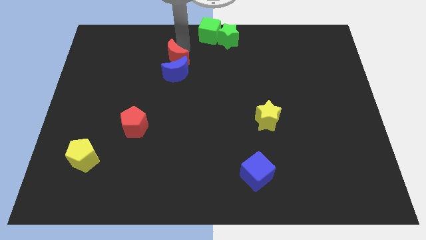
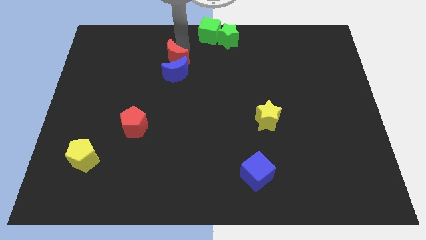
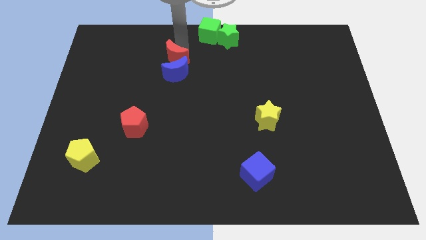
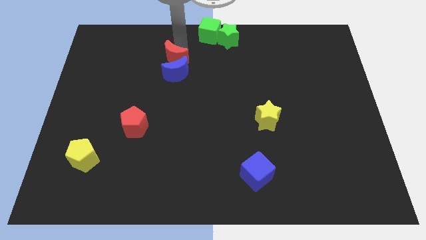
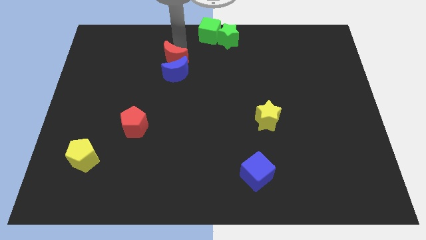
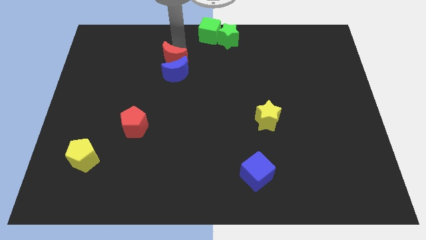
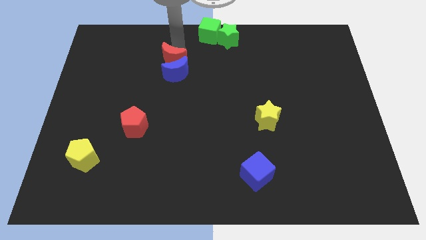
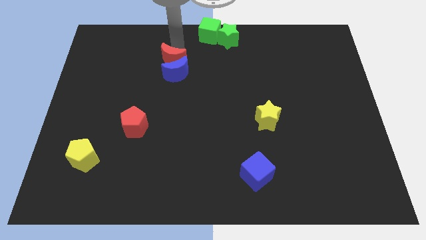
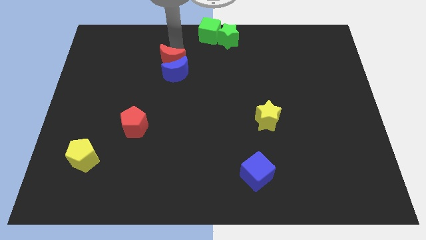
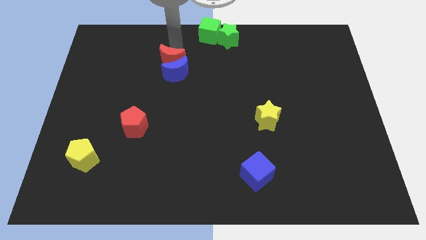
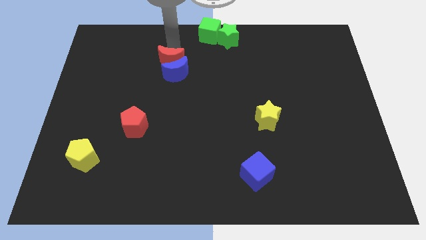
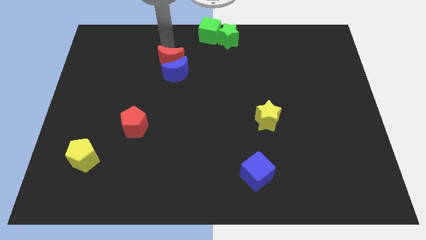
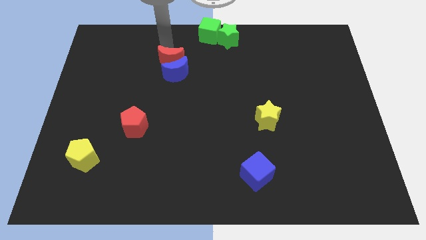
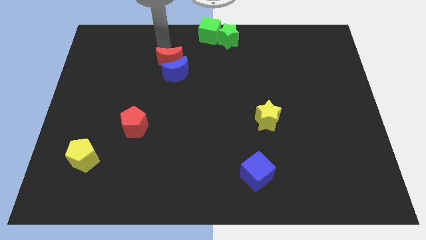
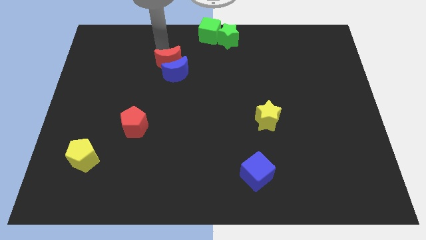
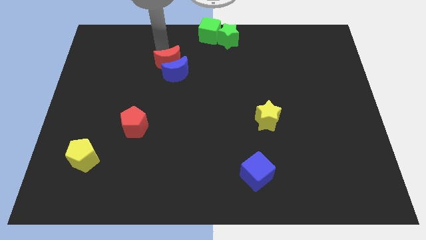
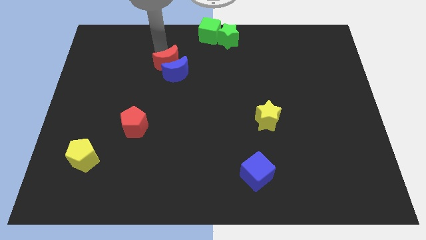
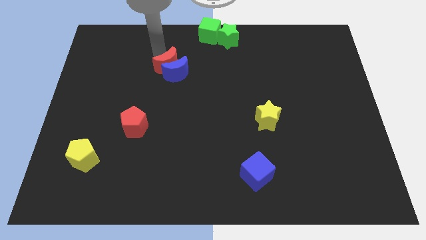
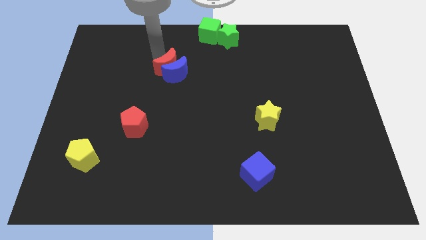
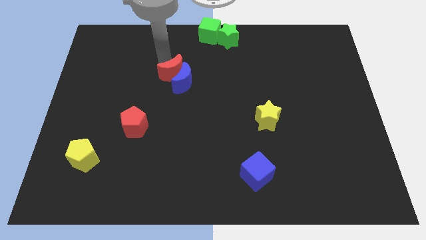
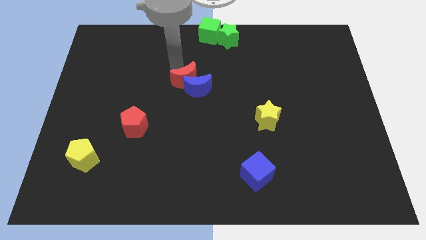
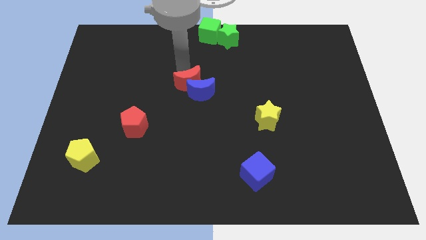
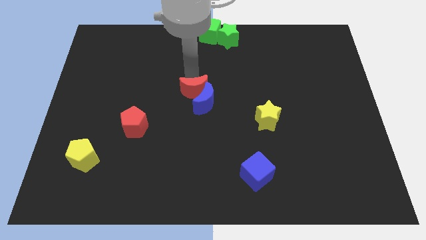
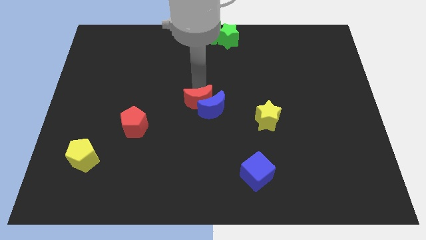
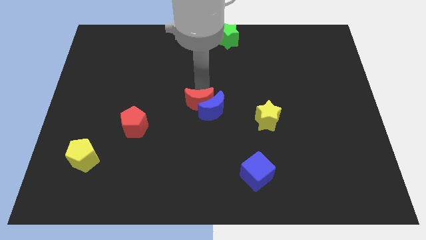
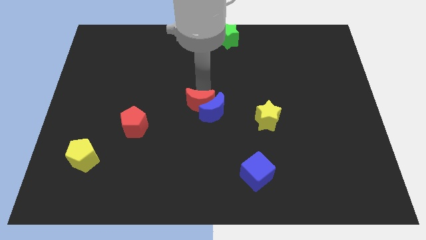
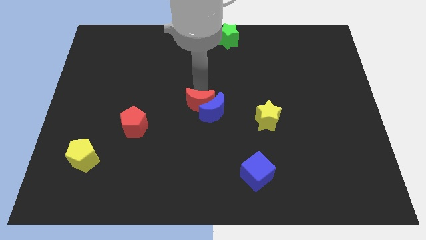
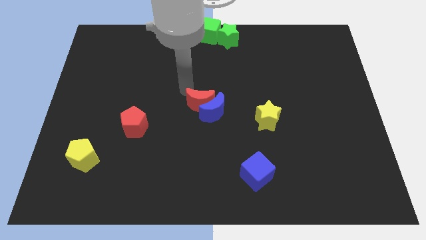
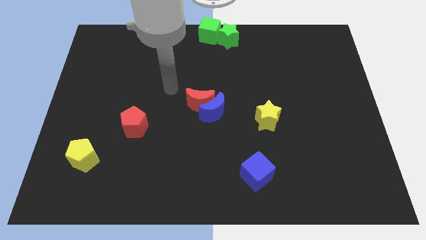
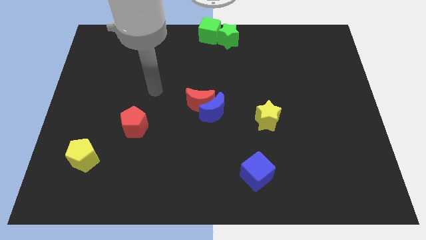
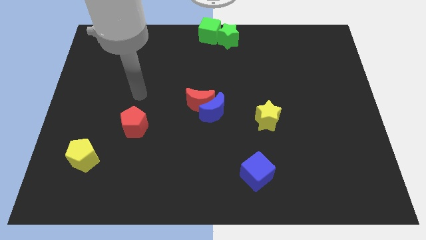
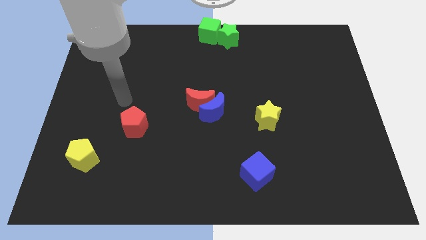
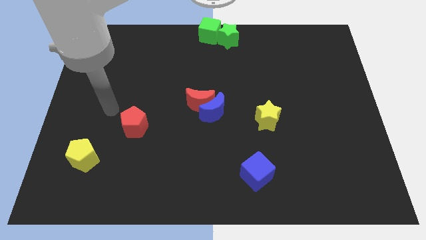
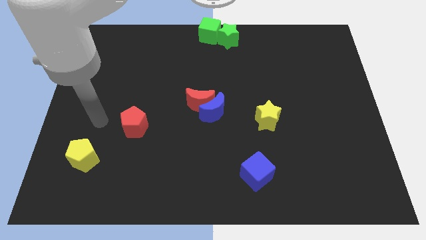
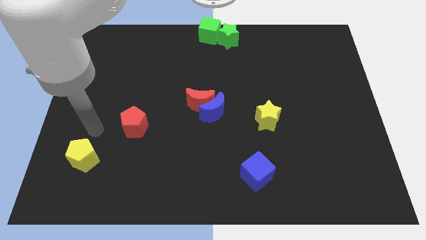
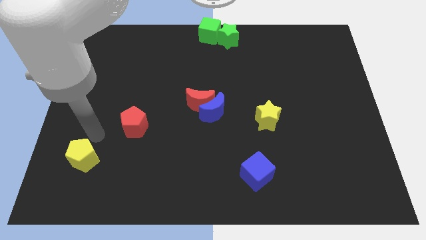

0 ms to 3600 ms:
place the red and blue crescents at the center of the board

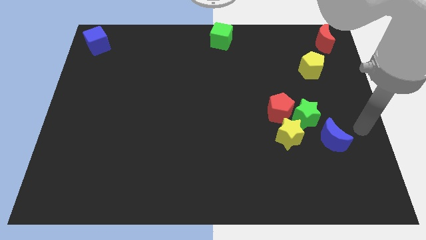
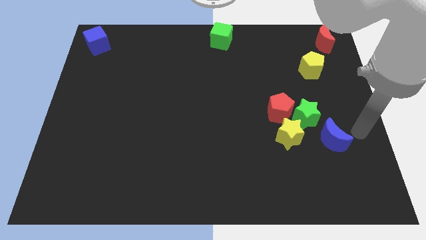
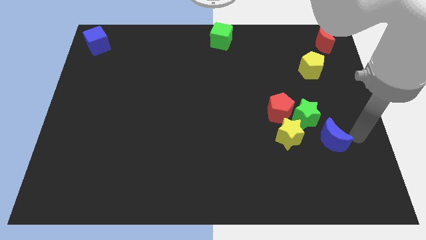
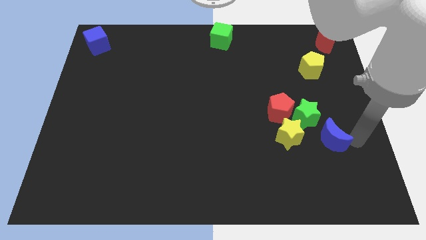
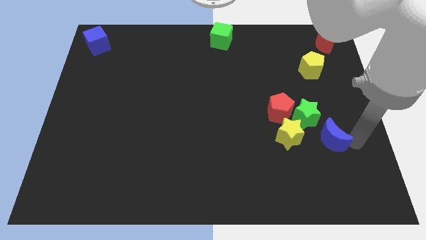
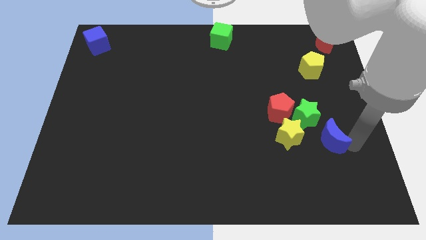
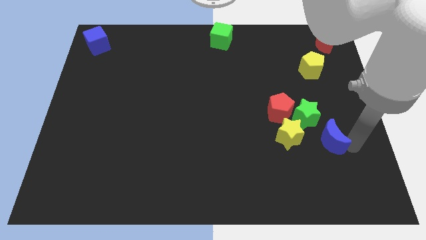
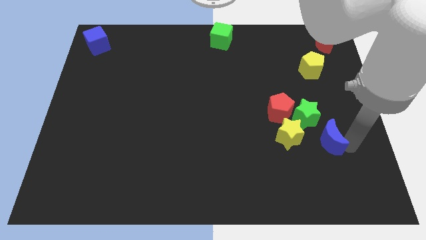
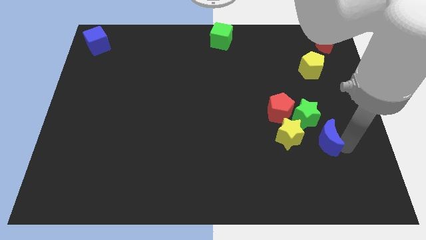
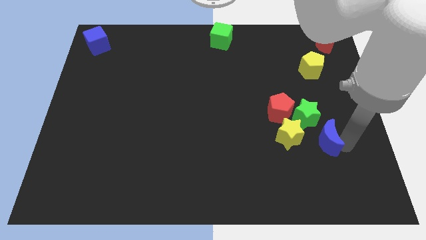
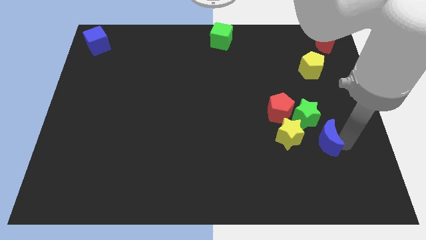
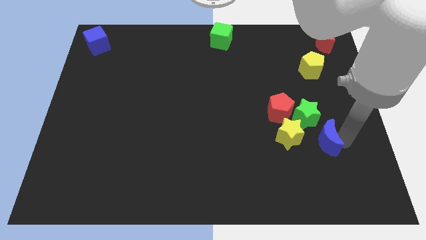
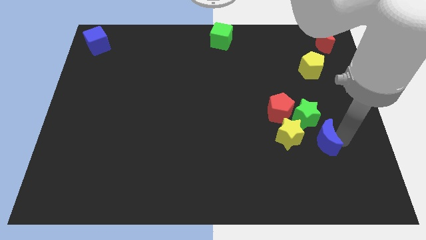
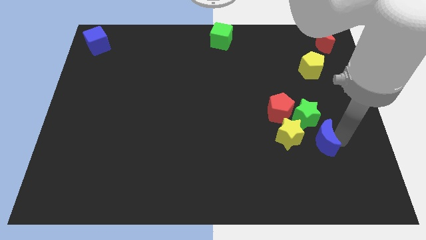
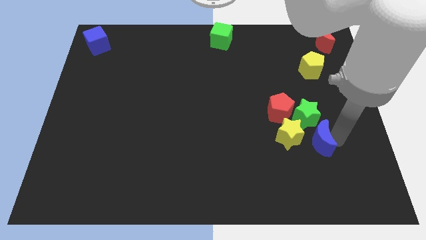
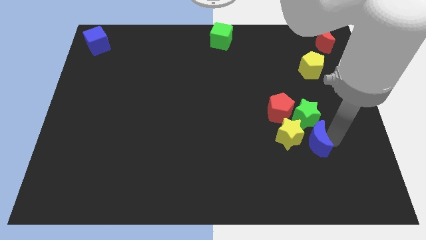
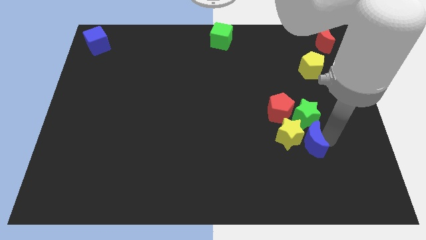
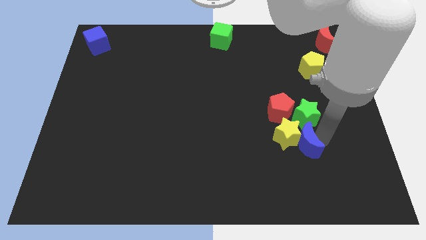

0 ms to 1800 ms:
place the blue moon to the right side of the yellow star

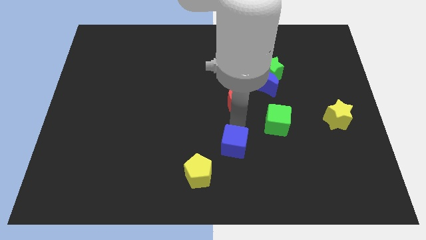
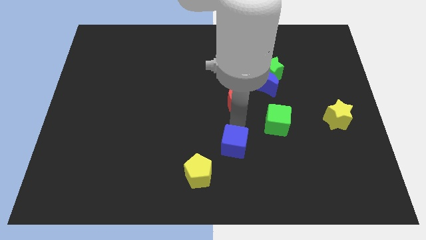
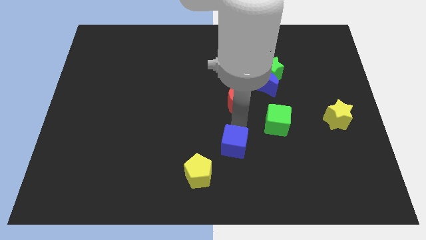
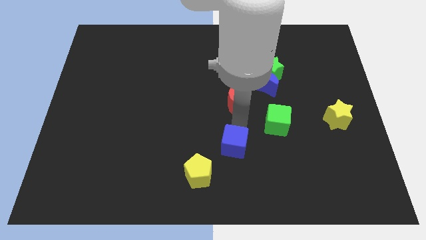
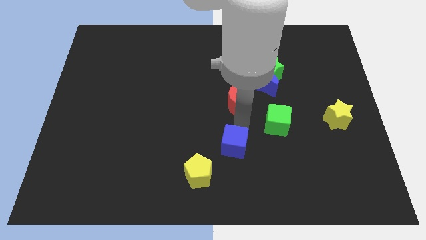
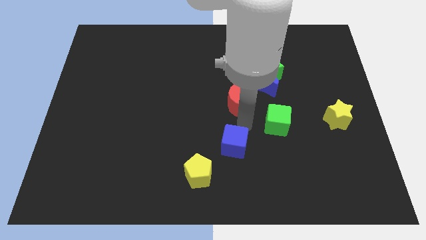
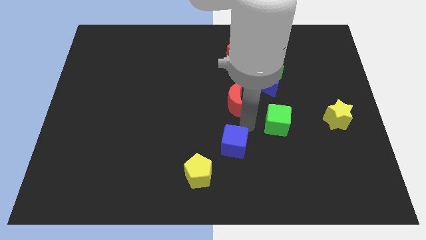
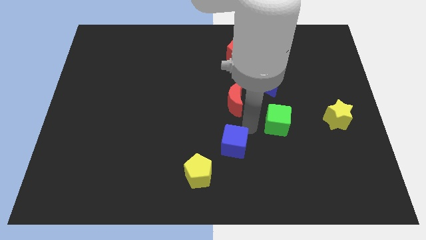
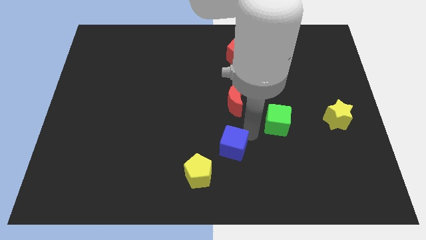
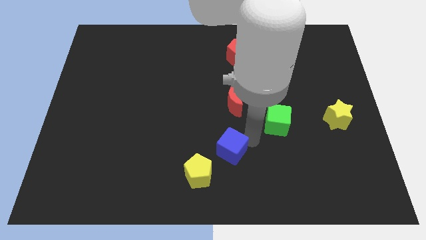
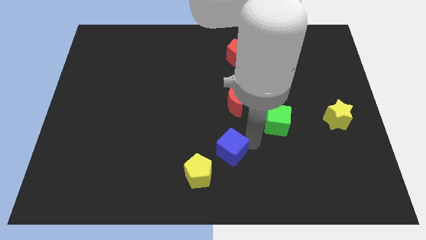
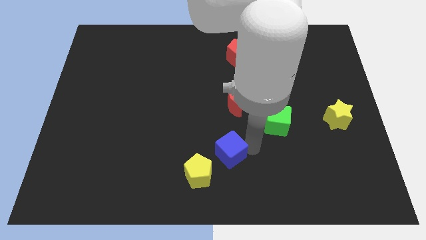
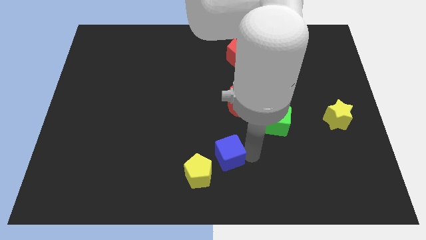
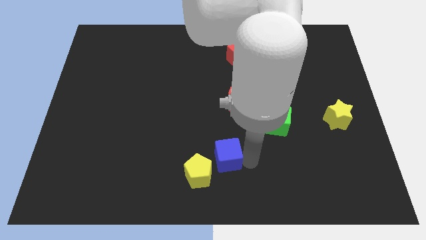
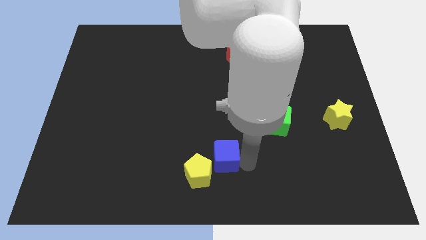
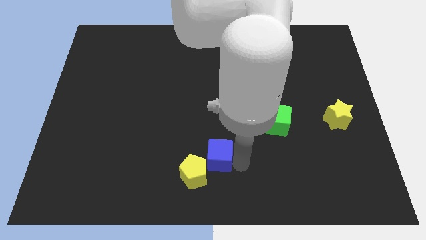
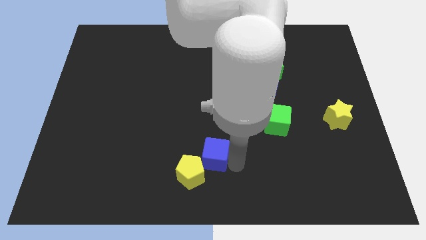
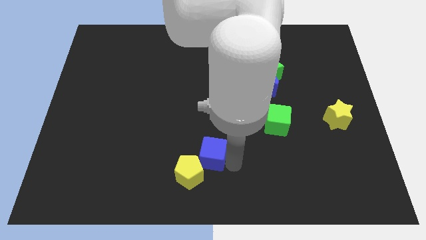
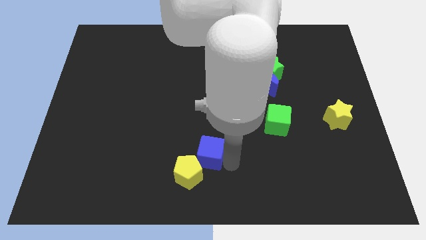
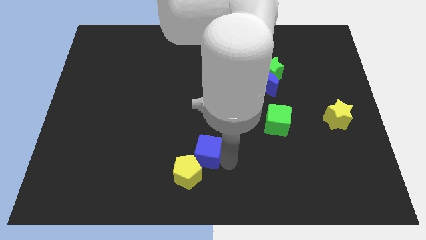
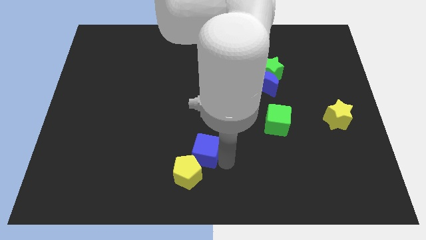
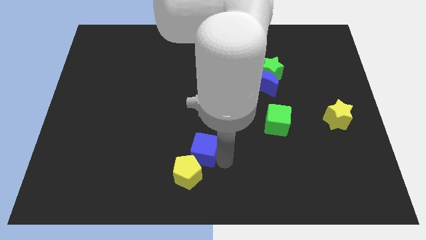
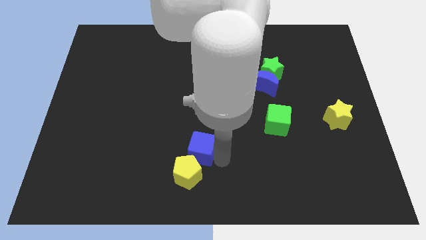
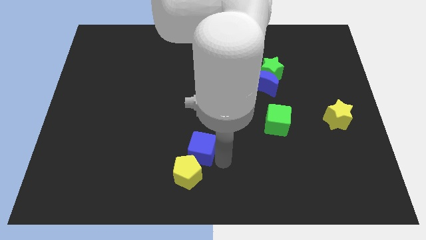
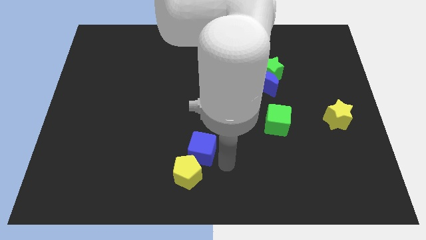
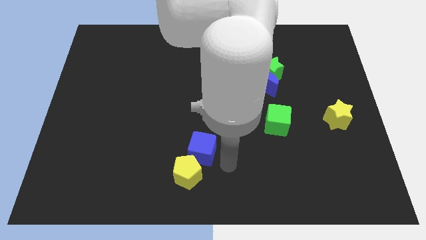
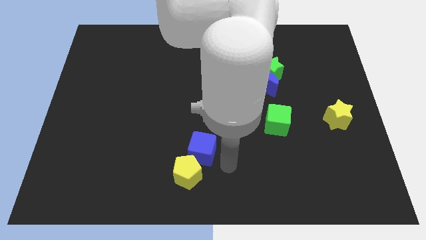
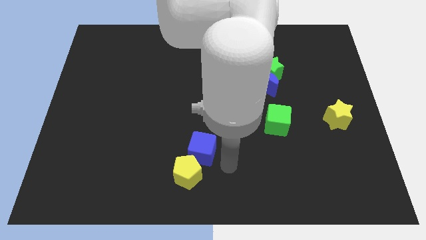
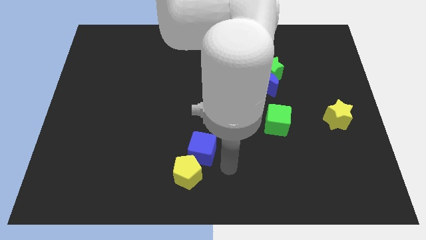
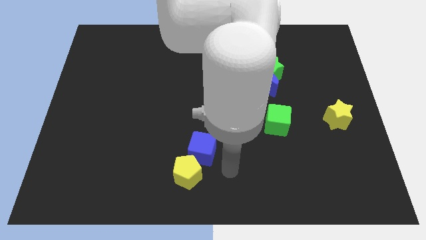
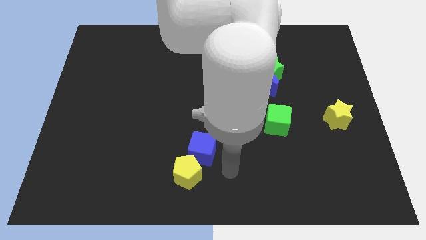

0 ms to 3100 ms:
move the blue cube to the top of the yellow pentagon

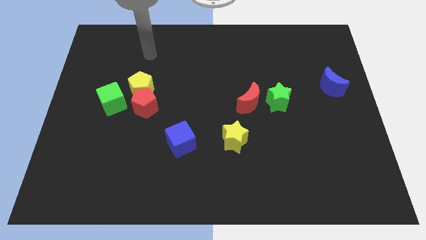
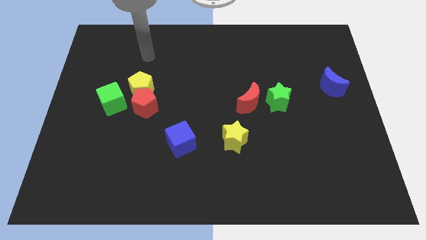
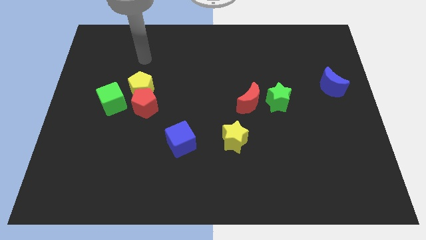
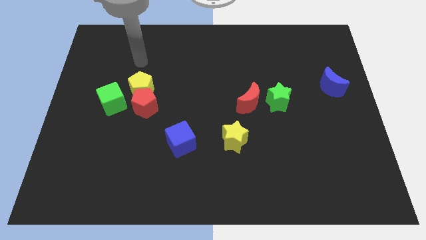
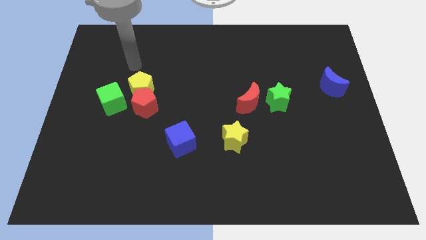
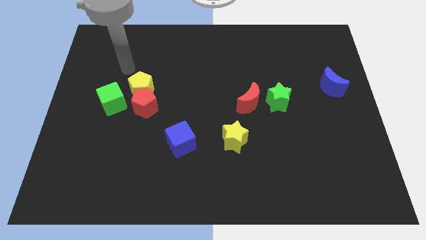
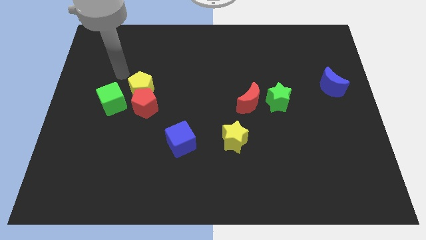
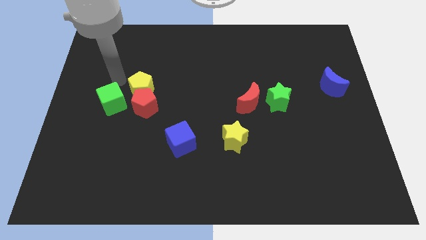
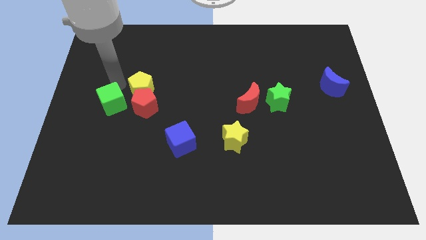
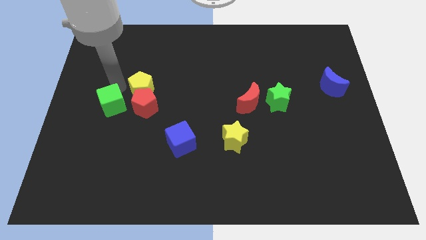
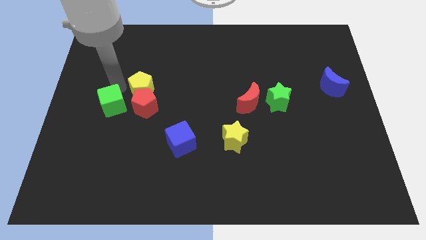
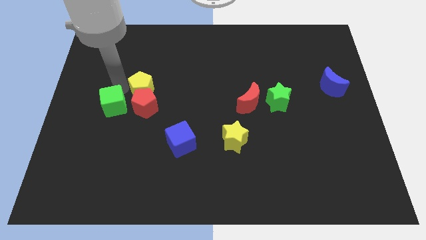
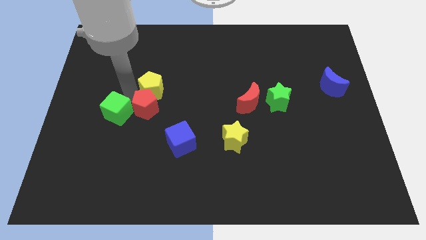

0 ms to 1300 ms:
place the green cube to the left of the red pentagon
